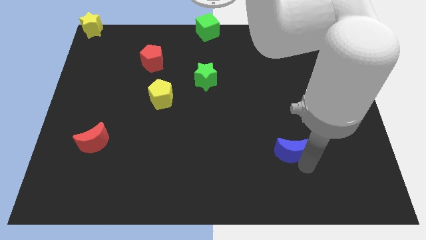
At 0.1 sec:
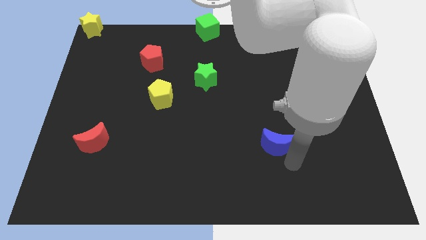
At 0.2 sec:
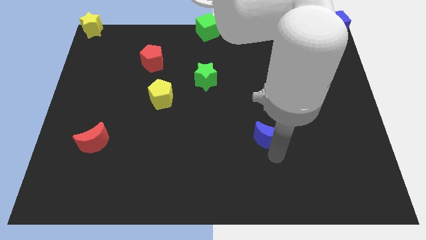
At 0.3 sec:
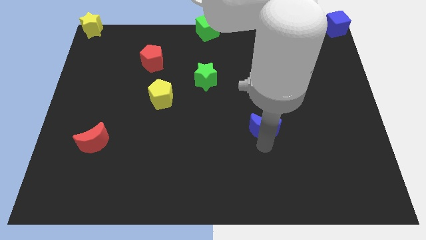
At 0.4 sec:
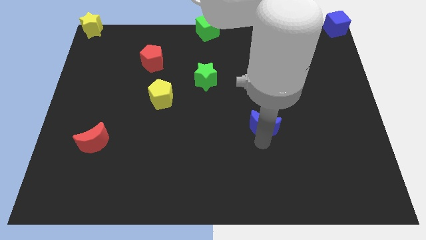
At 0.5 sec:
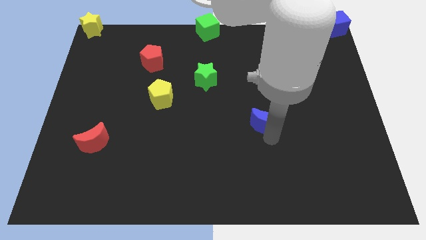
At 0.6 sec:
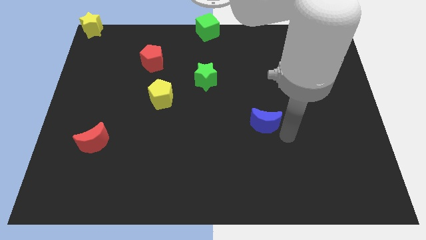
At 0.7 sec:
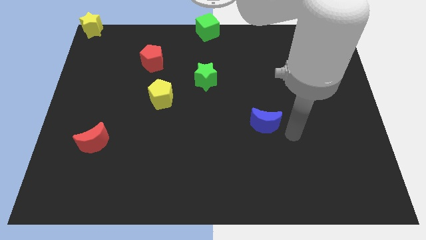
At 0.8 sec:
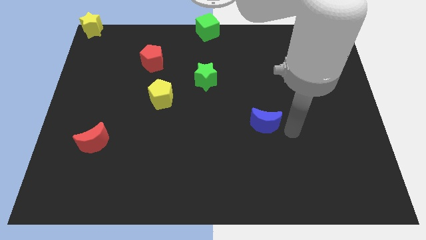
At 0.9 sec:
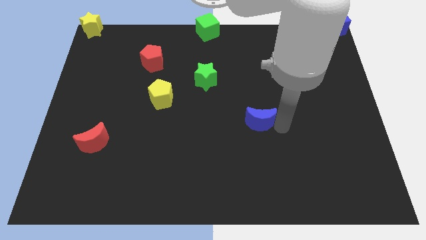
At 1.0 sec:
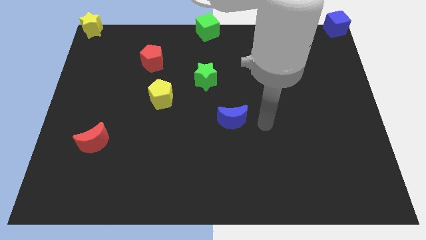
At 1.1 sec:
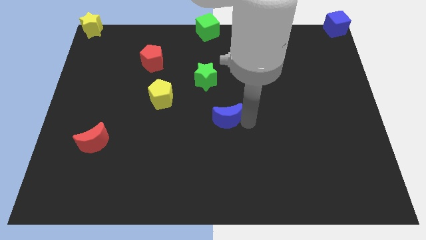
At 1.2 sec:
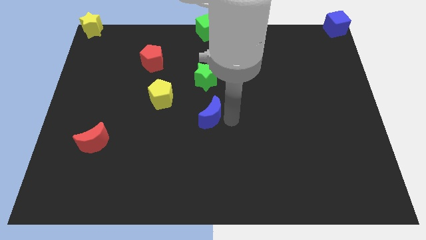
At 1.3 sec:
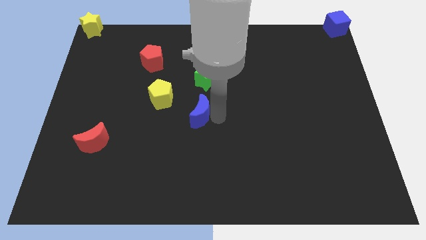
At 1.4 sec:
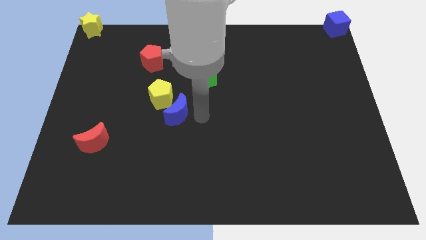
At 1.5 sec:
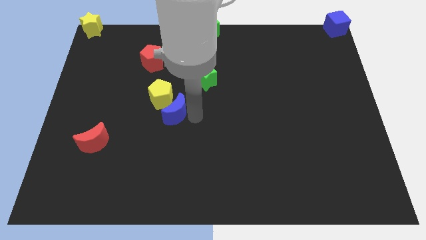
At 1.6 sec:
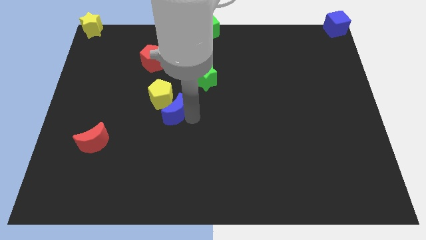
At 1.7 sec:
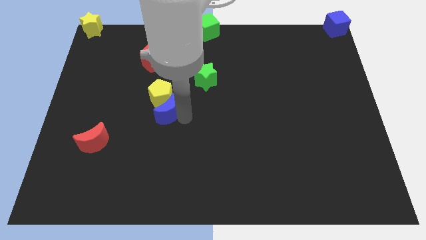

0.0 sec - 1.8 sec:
move blue crescent towards the yellow pentagon

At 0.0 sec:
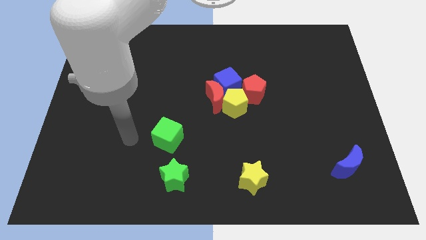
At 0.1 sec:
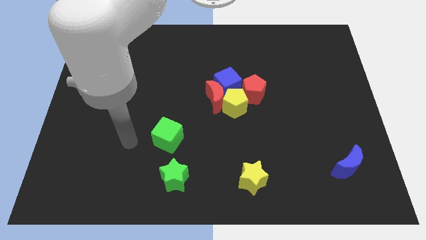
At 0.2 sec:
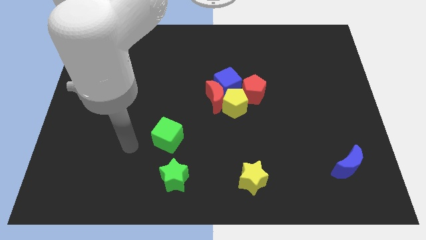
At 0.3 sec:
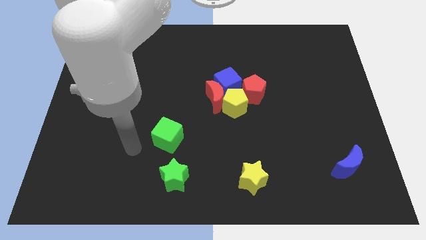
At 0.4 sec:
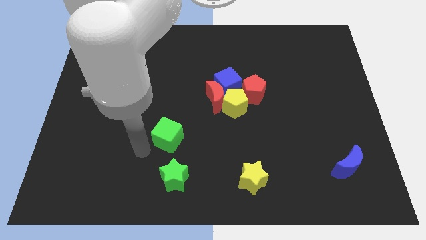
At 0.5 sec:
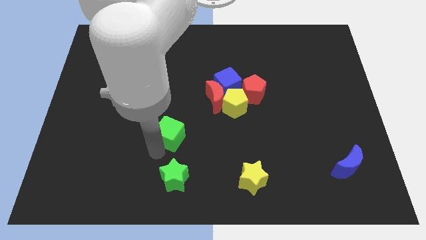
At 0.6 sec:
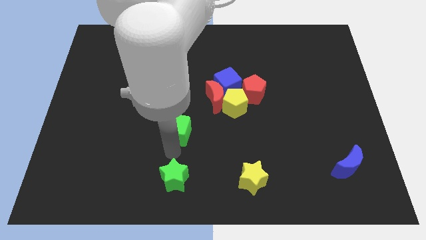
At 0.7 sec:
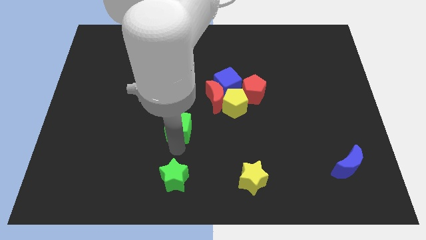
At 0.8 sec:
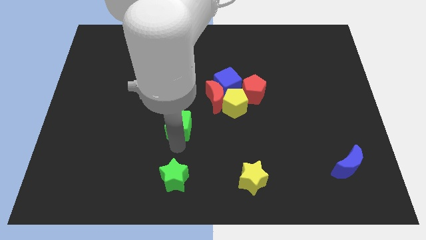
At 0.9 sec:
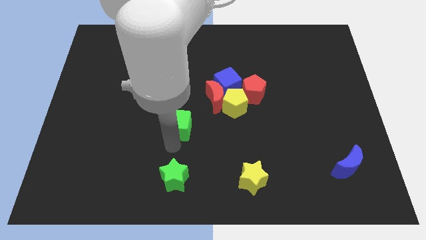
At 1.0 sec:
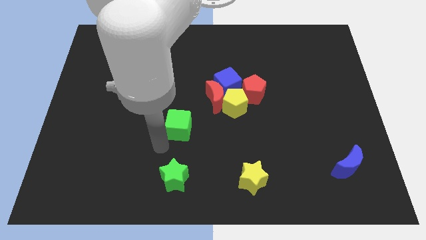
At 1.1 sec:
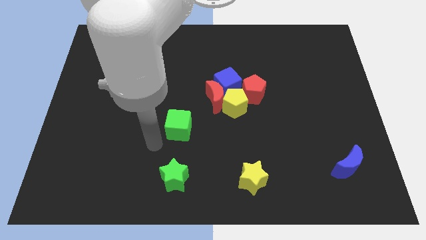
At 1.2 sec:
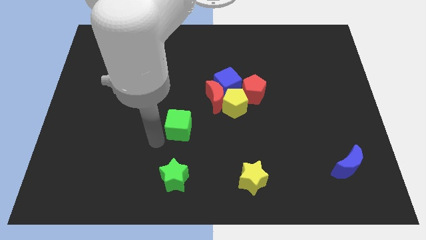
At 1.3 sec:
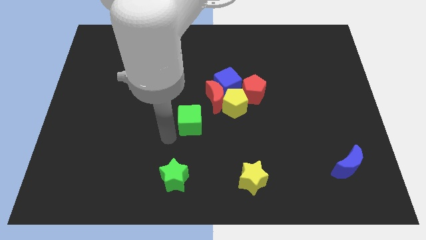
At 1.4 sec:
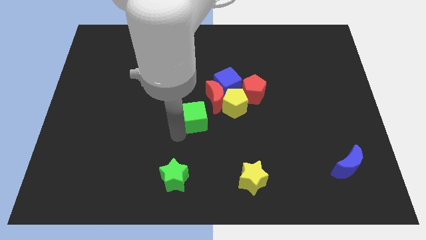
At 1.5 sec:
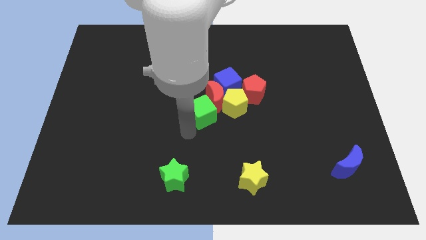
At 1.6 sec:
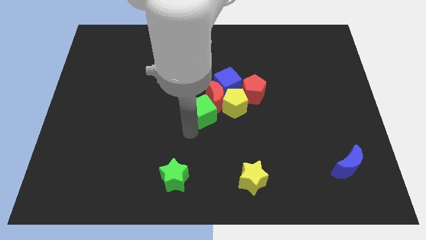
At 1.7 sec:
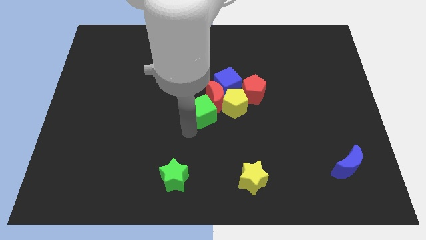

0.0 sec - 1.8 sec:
move the green cube towards the red crescent

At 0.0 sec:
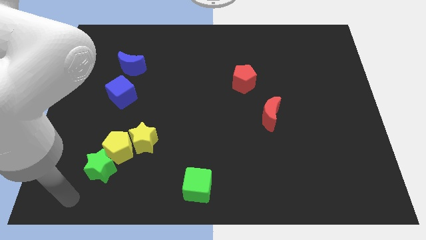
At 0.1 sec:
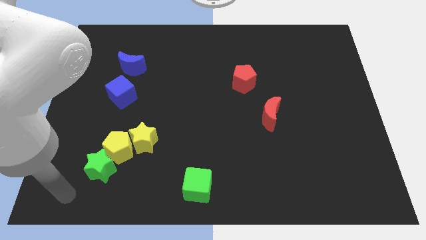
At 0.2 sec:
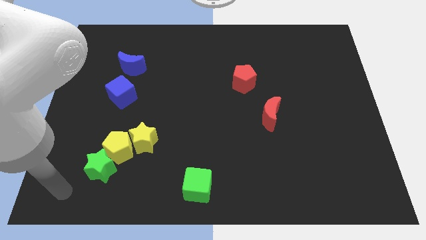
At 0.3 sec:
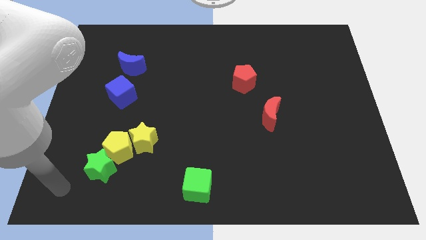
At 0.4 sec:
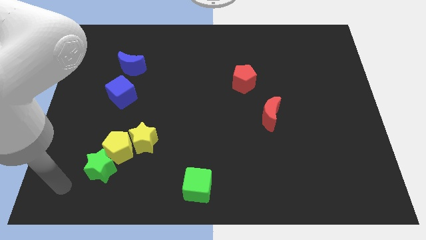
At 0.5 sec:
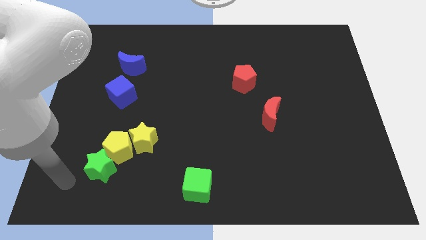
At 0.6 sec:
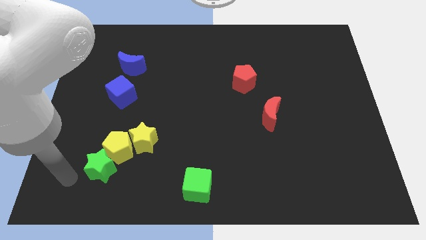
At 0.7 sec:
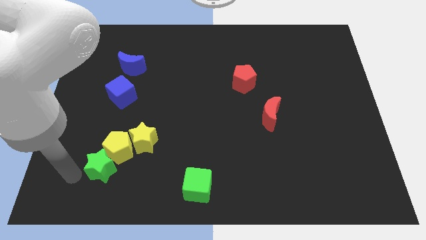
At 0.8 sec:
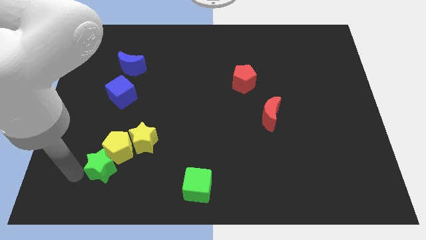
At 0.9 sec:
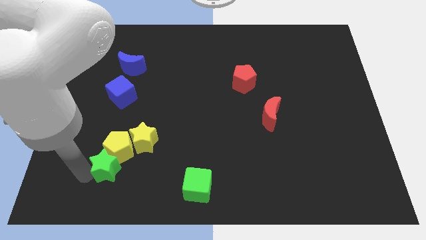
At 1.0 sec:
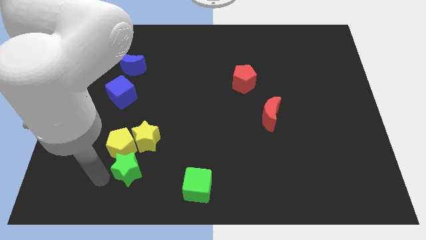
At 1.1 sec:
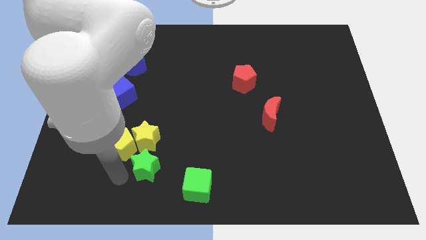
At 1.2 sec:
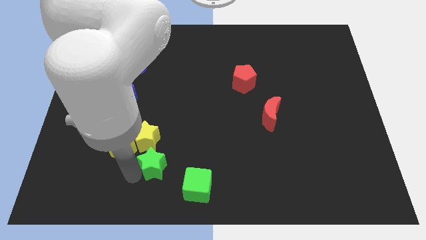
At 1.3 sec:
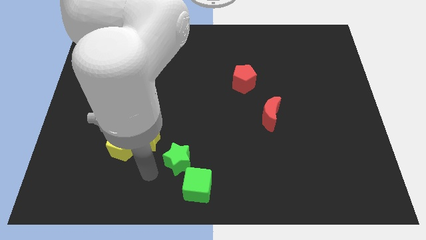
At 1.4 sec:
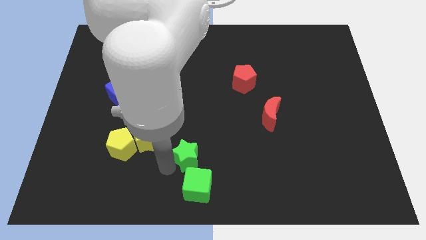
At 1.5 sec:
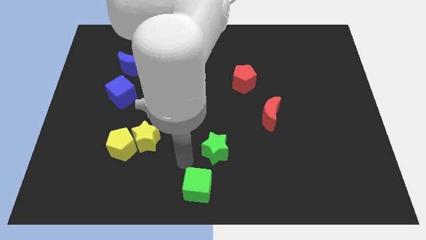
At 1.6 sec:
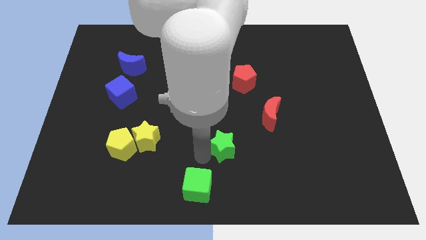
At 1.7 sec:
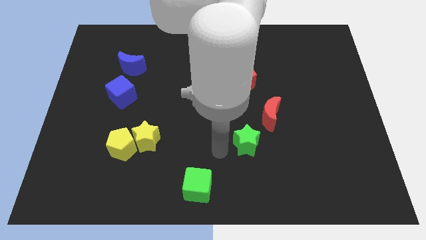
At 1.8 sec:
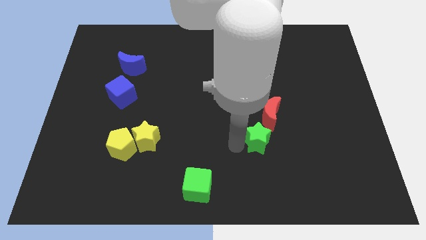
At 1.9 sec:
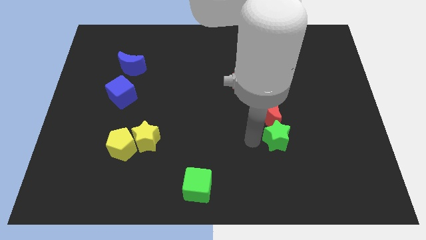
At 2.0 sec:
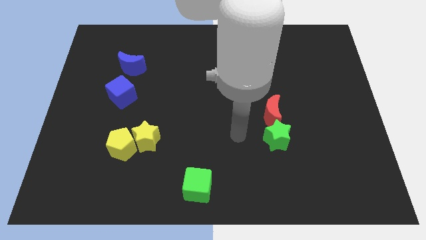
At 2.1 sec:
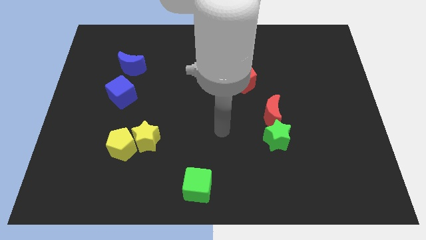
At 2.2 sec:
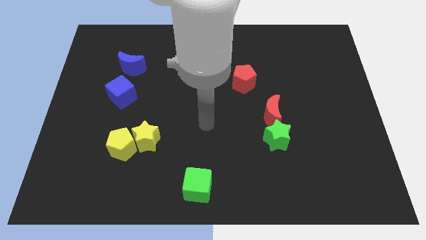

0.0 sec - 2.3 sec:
place the green star below the red moon

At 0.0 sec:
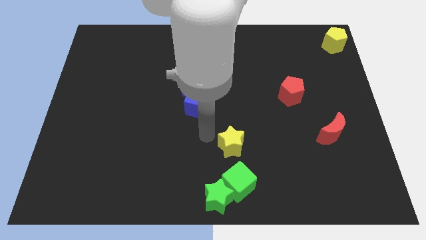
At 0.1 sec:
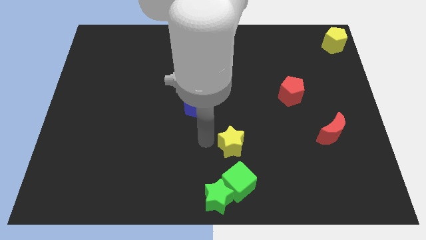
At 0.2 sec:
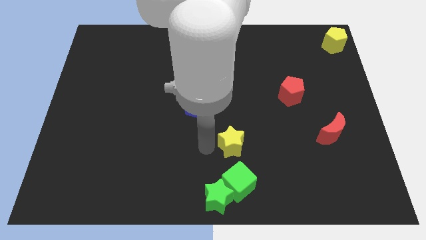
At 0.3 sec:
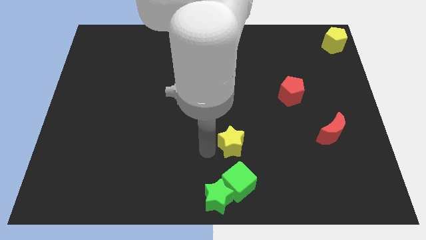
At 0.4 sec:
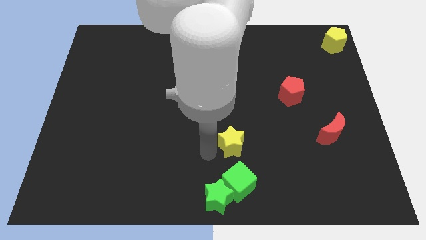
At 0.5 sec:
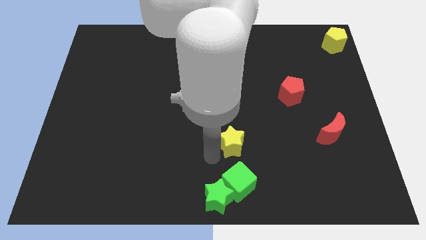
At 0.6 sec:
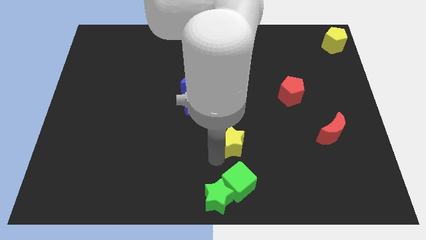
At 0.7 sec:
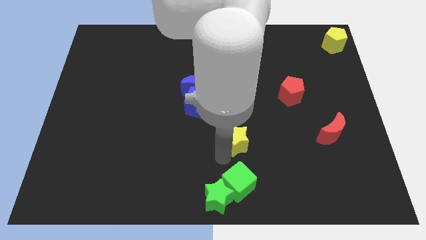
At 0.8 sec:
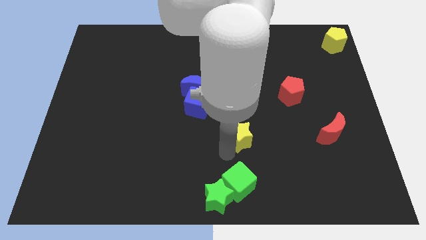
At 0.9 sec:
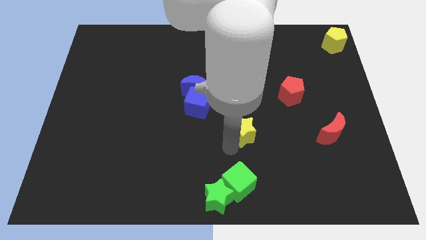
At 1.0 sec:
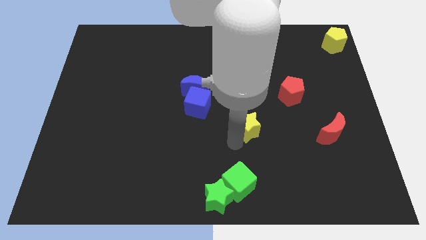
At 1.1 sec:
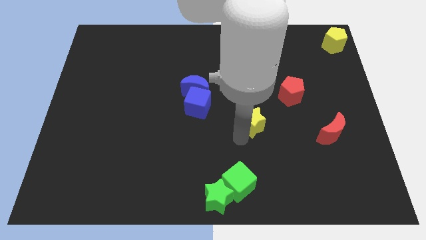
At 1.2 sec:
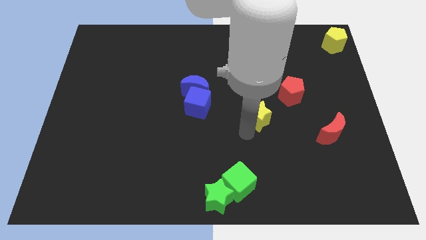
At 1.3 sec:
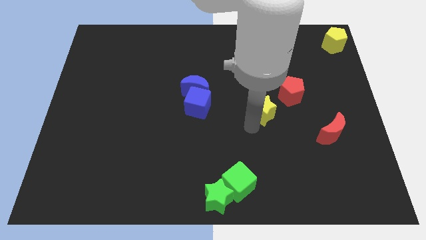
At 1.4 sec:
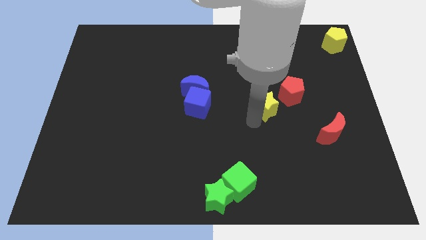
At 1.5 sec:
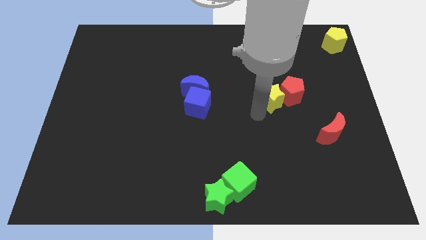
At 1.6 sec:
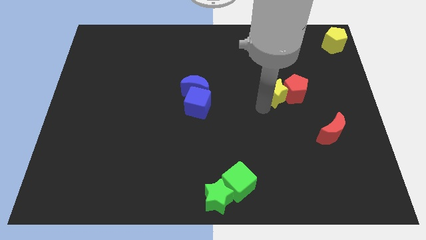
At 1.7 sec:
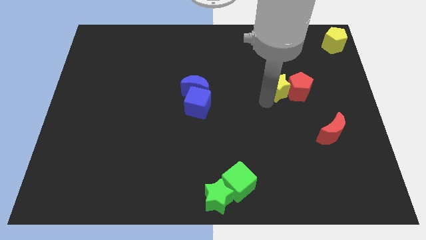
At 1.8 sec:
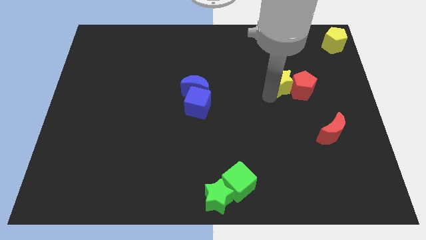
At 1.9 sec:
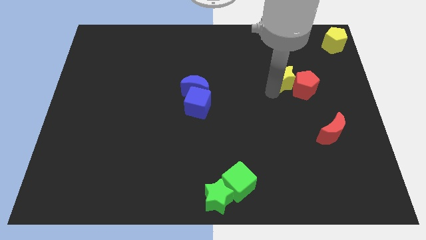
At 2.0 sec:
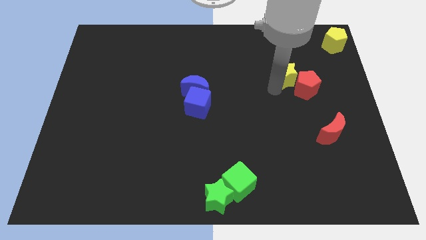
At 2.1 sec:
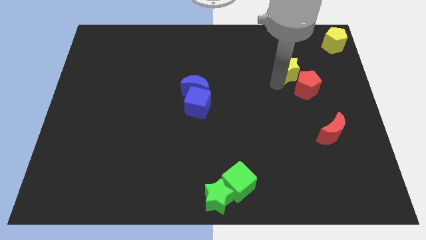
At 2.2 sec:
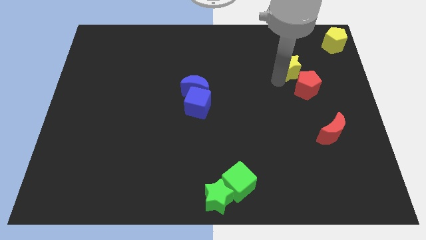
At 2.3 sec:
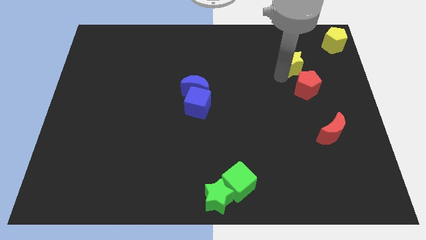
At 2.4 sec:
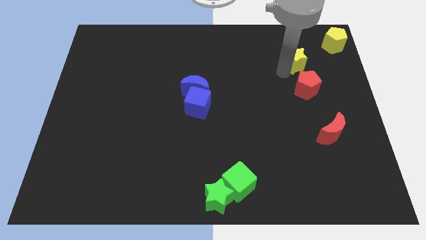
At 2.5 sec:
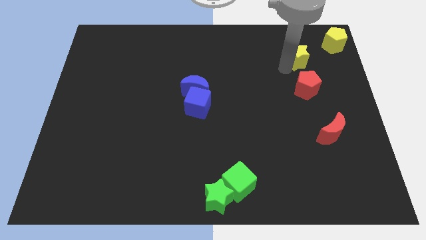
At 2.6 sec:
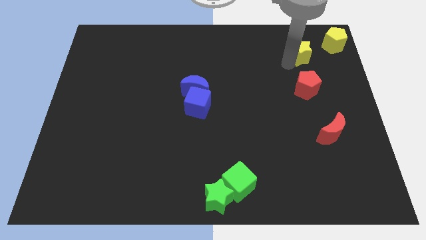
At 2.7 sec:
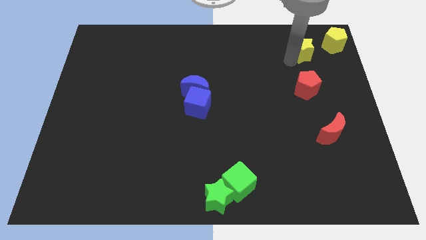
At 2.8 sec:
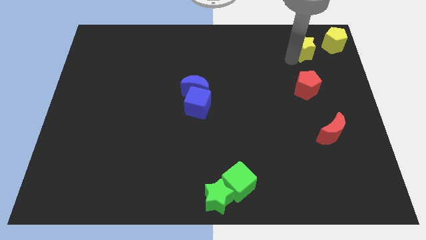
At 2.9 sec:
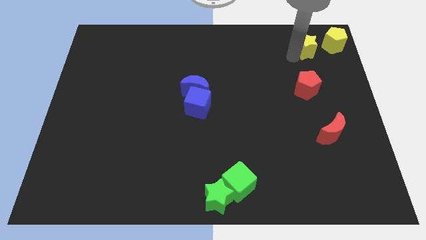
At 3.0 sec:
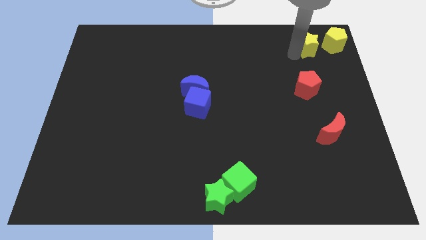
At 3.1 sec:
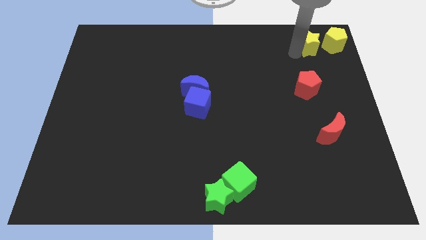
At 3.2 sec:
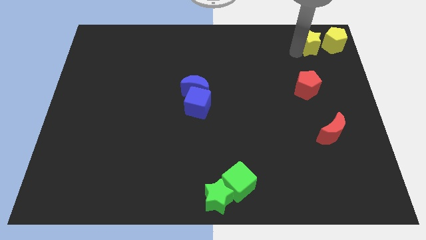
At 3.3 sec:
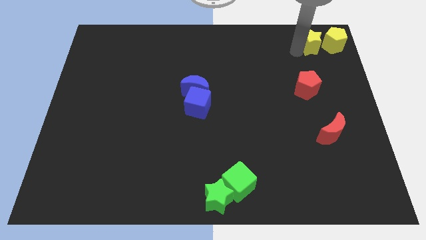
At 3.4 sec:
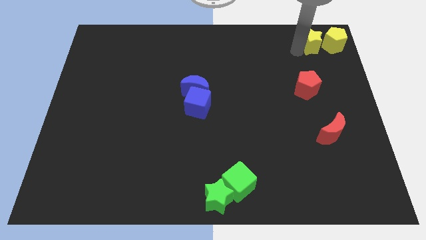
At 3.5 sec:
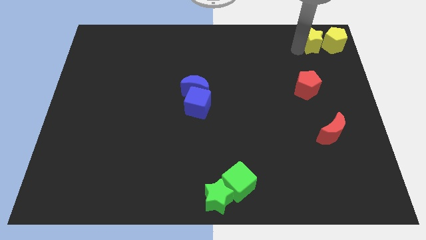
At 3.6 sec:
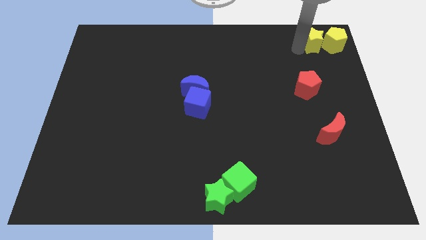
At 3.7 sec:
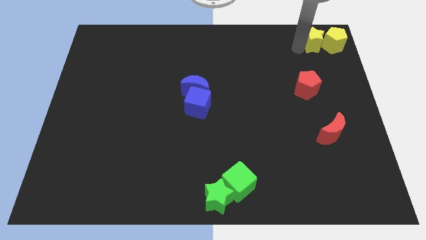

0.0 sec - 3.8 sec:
place yellow star beside yellow pentagon
